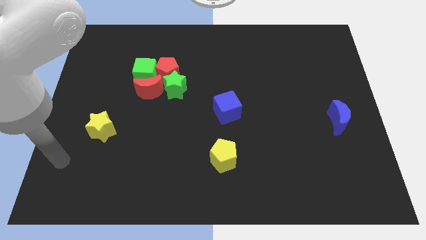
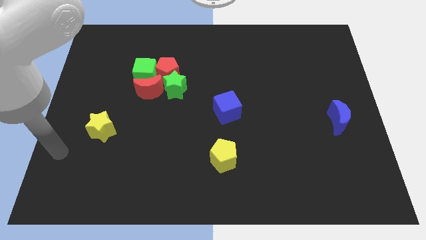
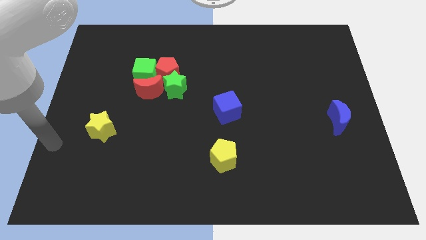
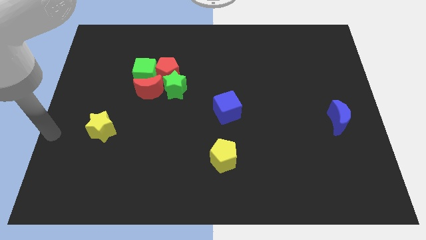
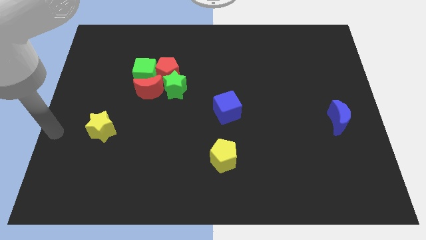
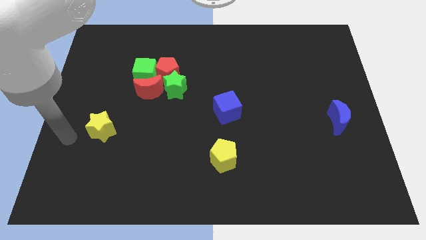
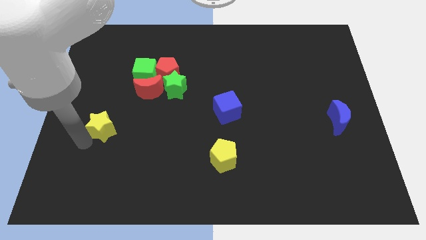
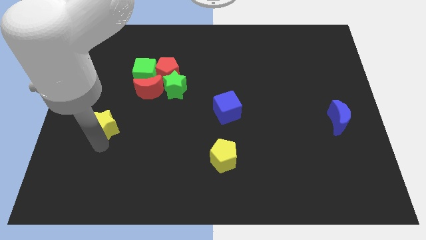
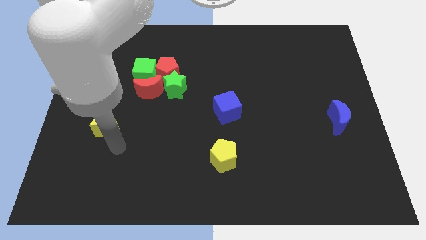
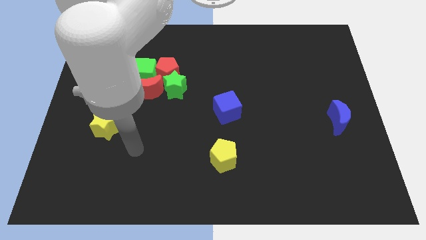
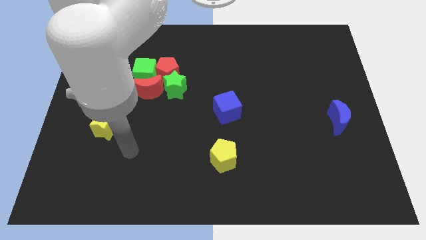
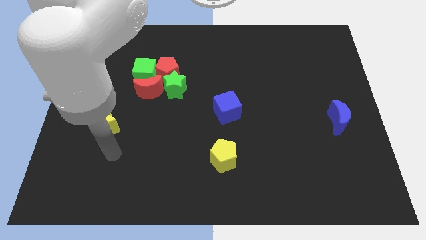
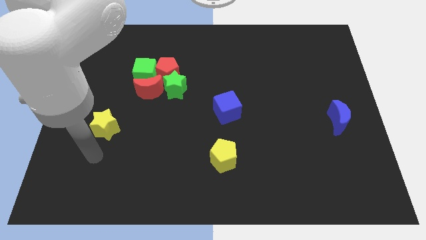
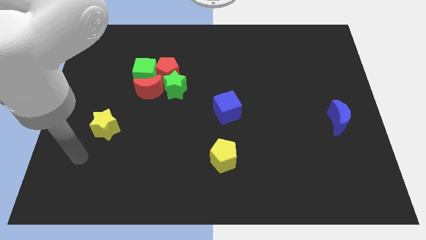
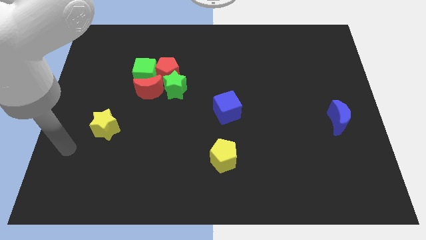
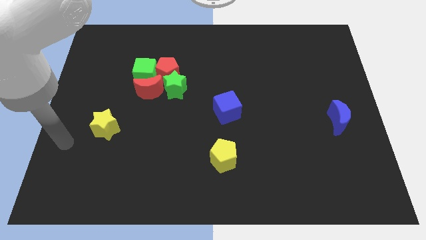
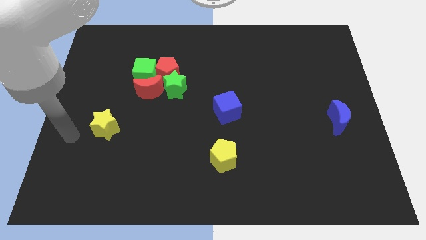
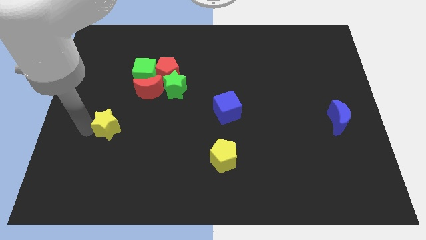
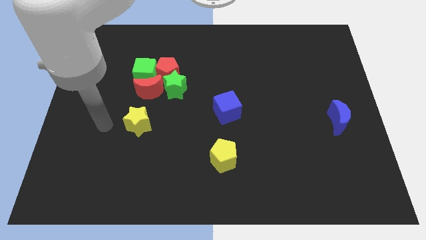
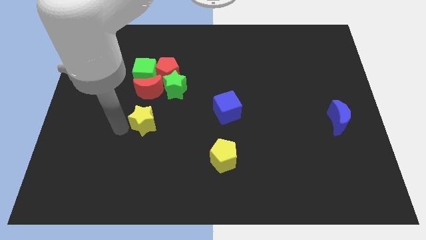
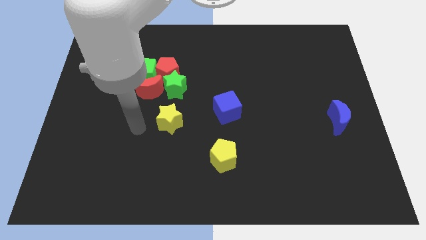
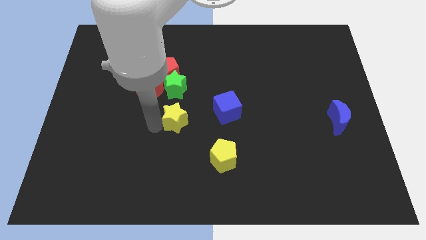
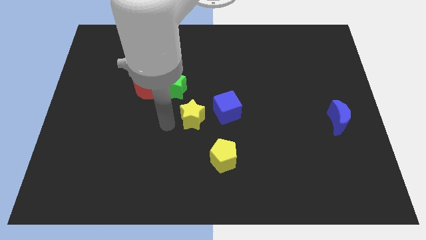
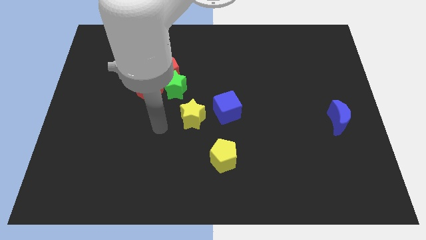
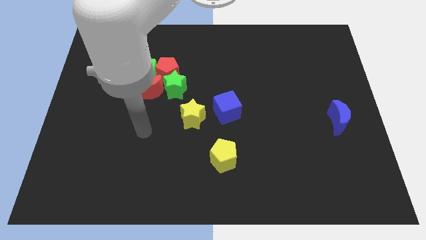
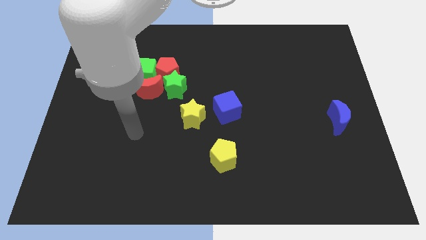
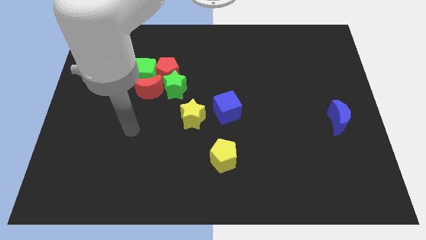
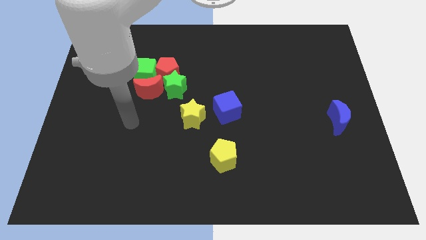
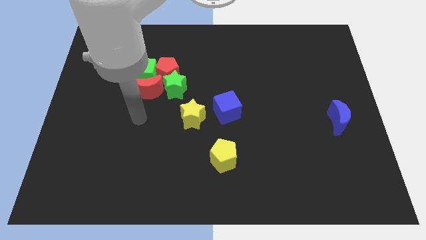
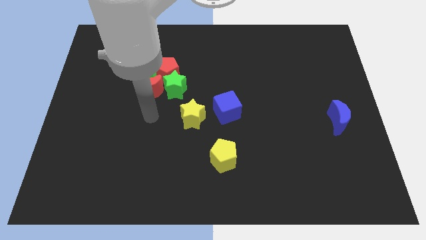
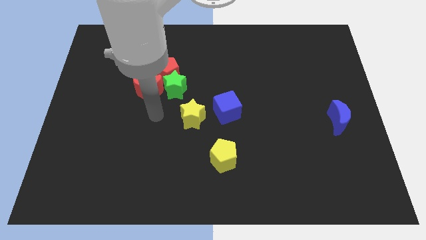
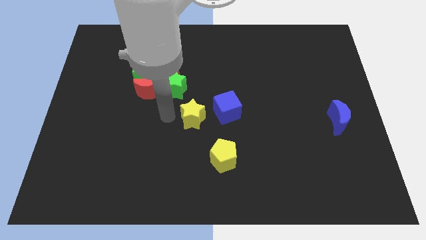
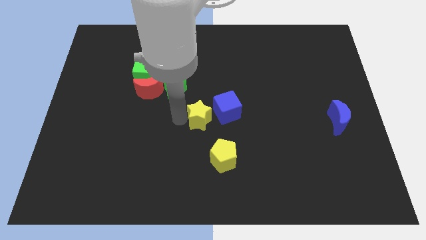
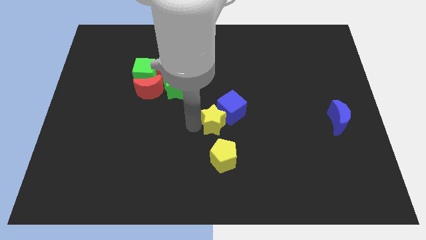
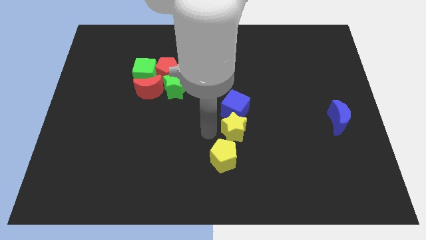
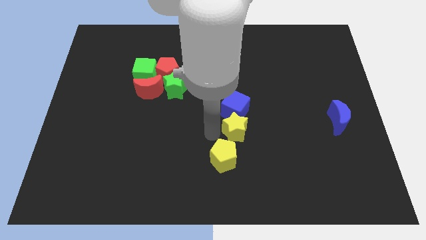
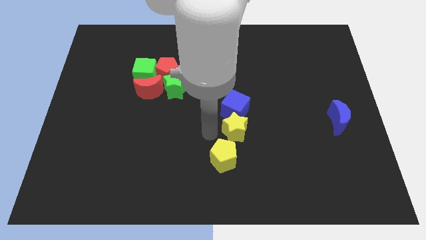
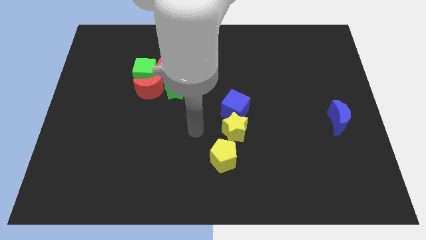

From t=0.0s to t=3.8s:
place the yellow star in between the blue cube and yelllow pentagon

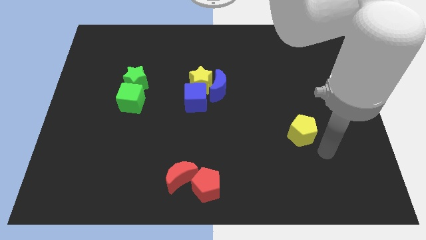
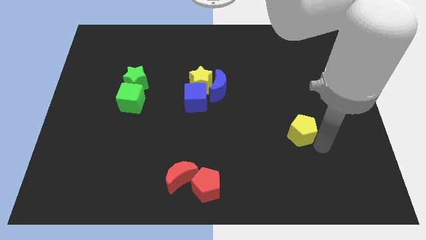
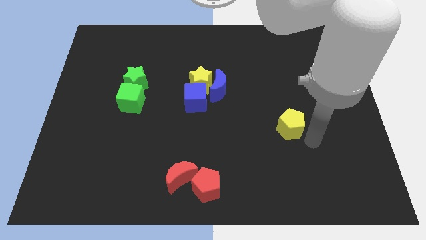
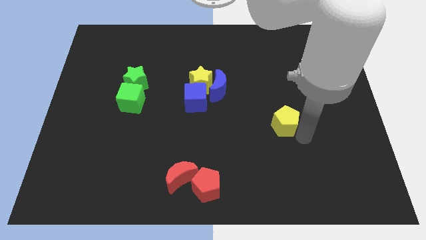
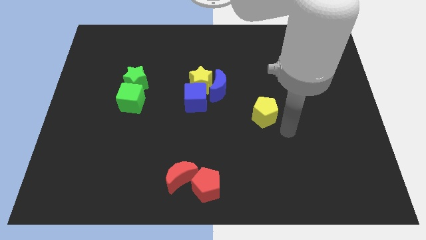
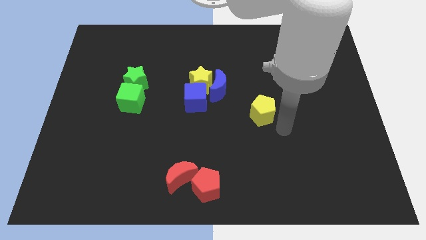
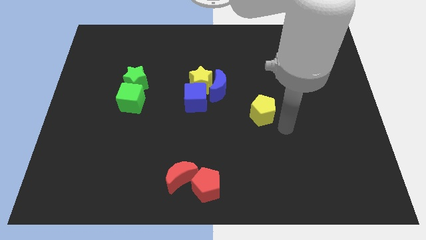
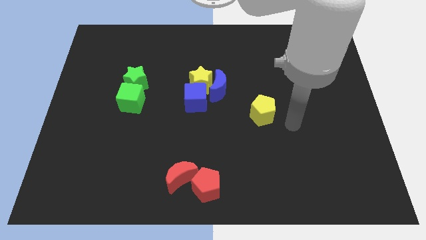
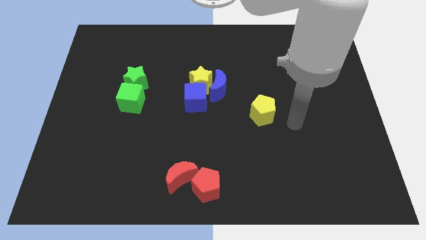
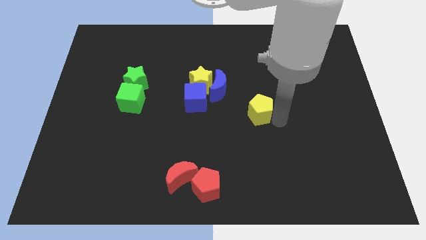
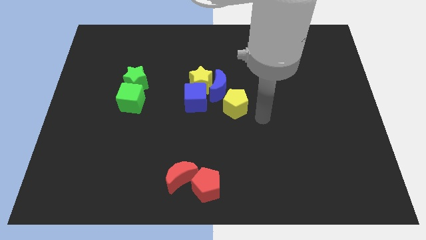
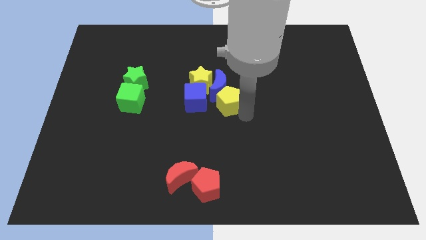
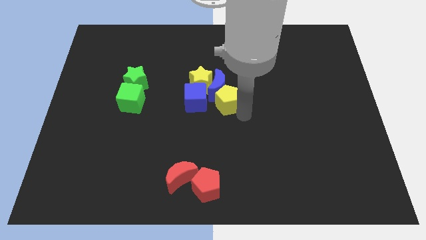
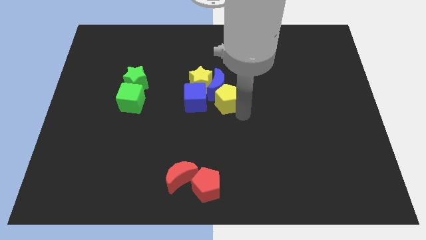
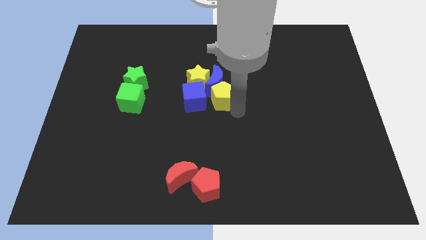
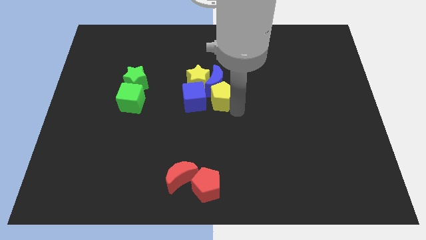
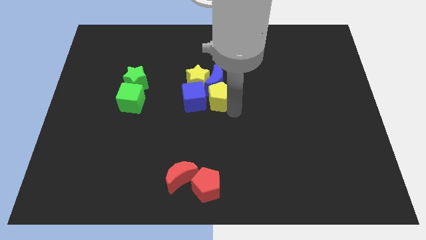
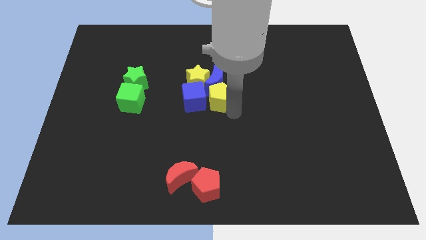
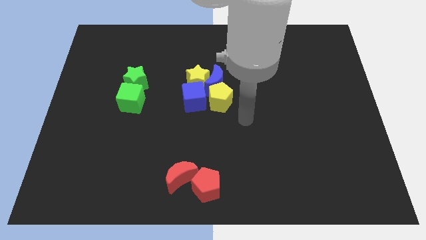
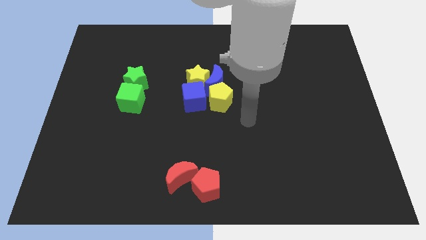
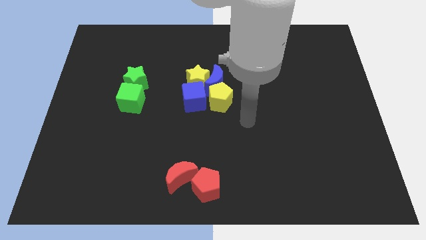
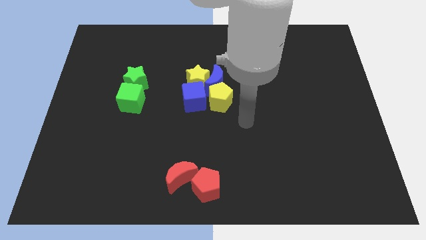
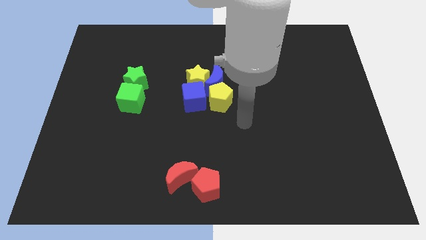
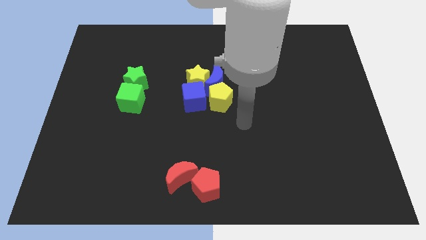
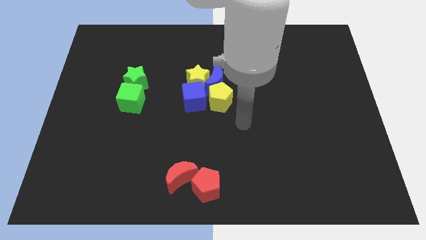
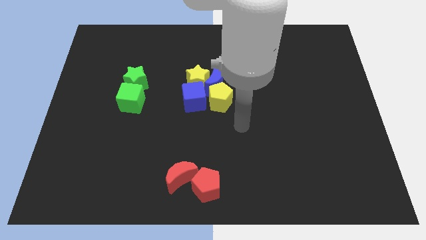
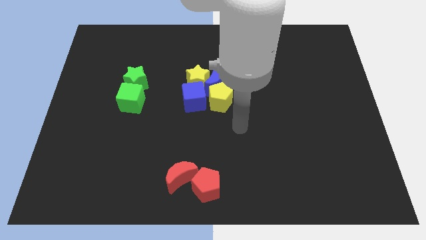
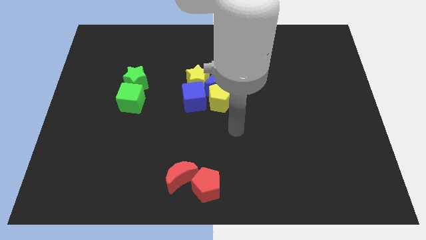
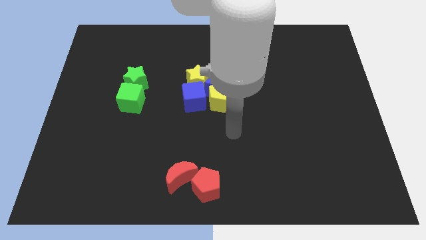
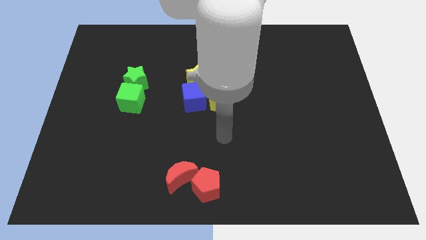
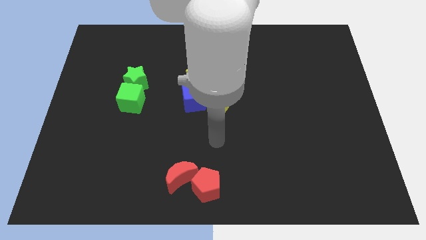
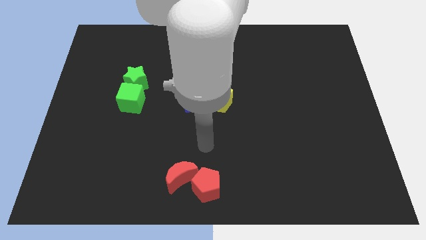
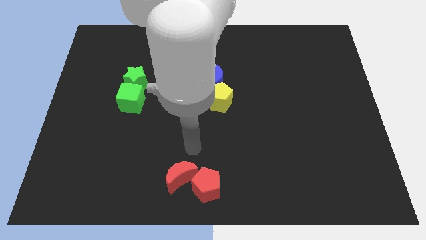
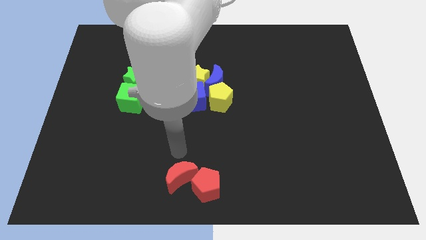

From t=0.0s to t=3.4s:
move the yellow pentagon to the right of the blue cube

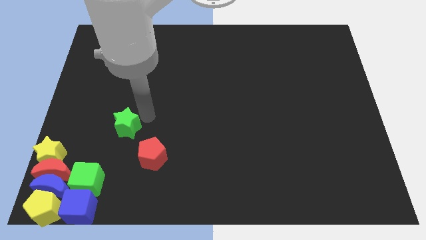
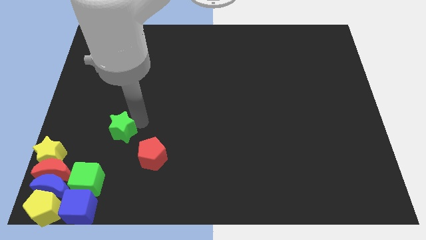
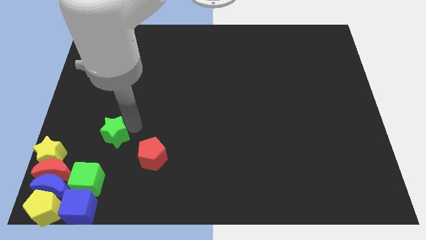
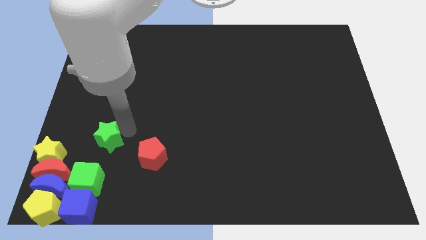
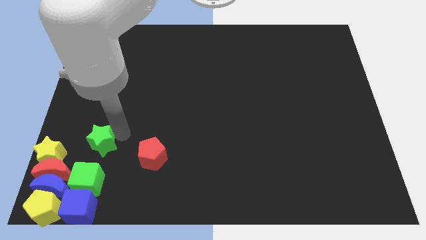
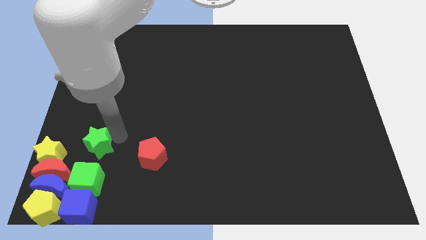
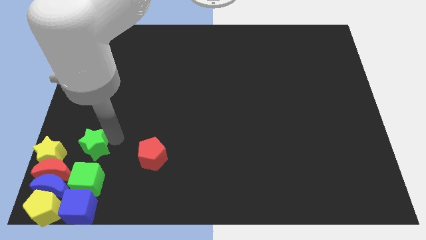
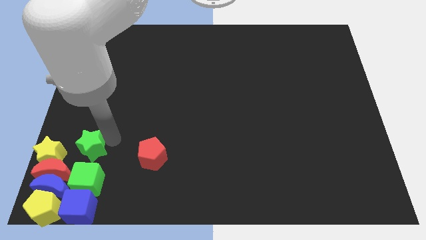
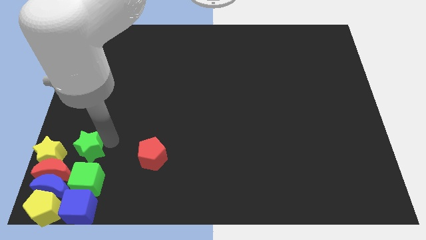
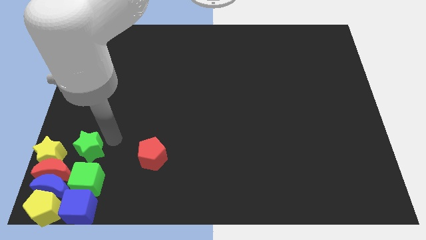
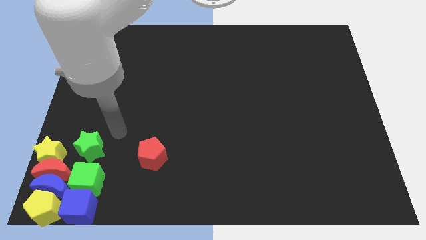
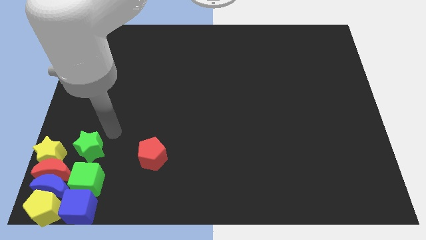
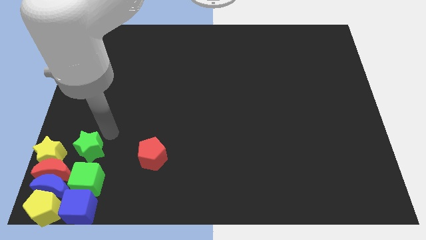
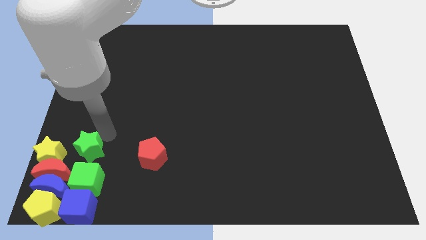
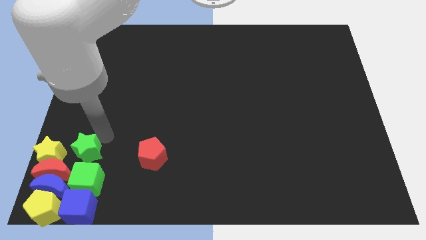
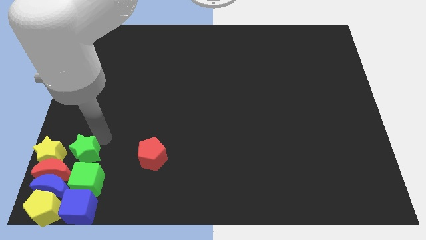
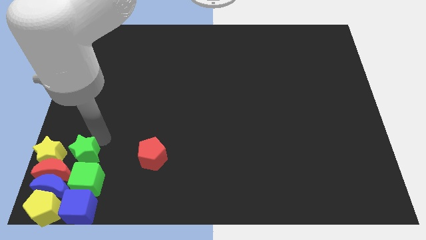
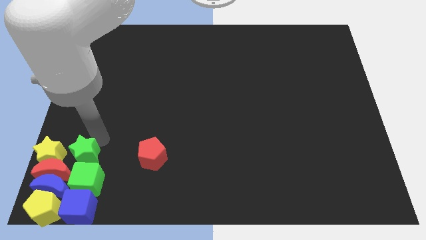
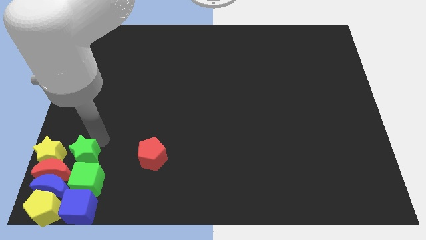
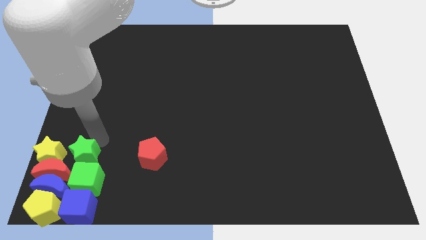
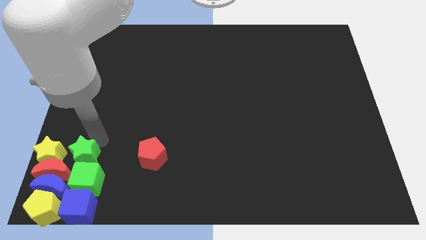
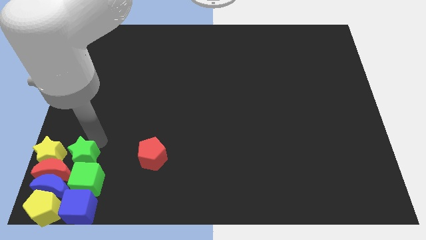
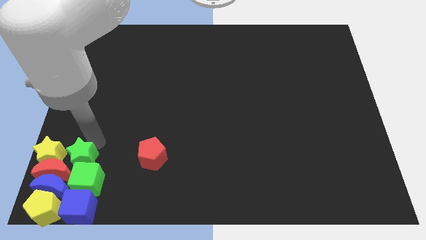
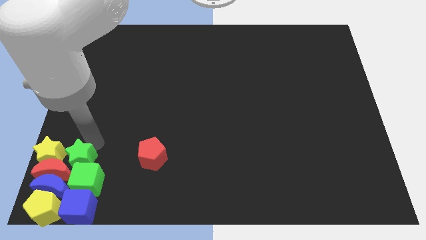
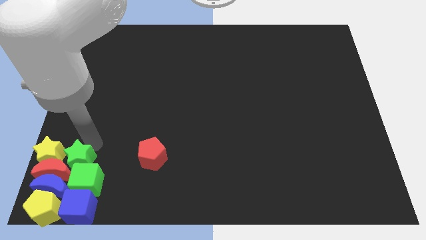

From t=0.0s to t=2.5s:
place green star to the top of the green cube
